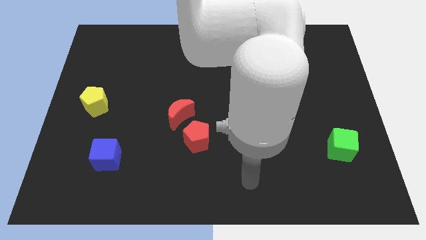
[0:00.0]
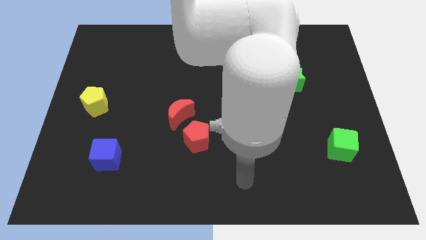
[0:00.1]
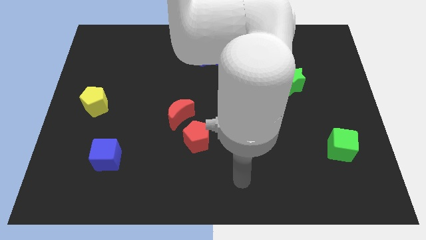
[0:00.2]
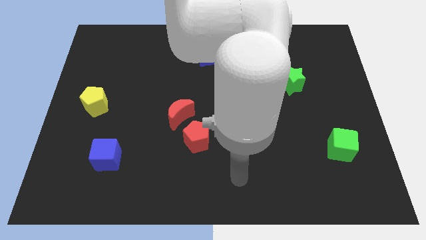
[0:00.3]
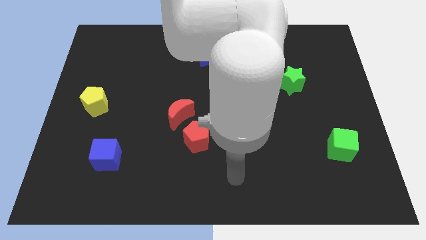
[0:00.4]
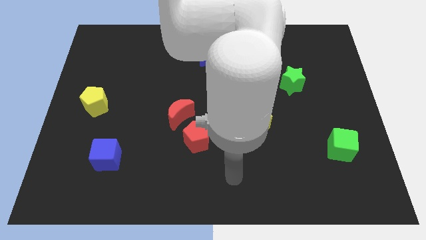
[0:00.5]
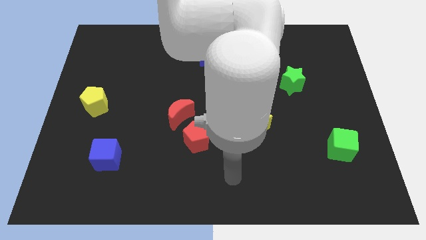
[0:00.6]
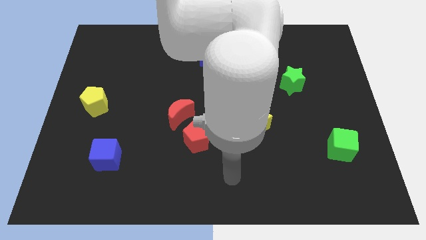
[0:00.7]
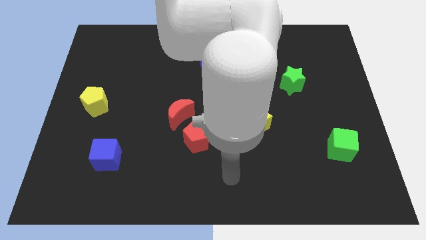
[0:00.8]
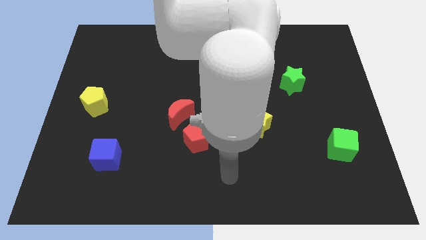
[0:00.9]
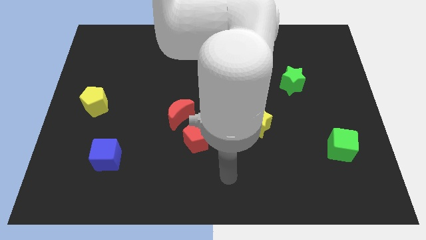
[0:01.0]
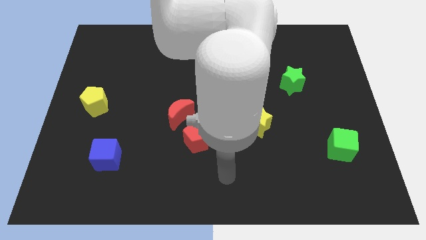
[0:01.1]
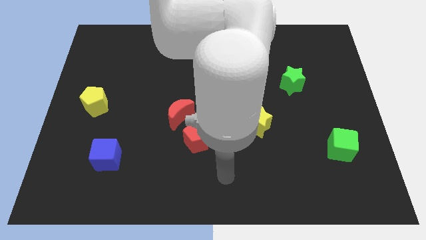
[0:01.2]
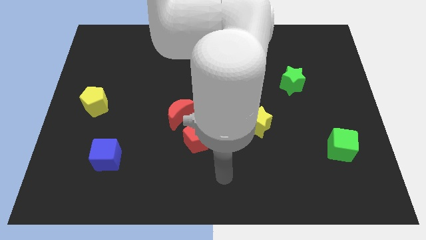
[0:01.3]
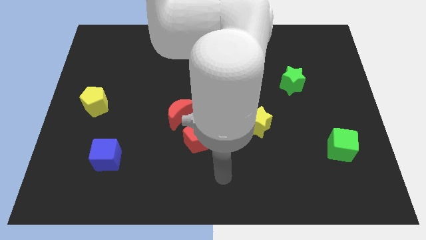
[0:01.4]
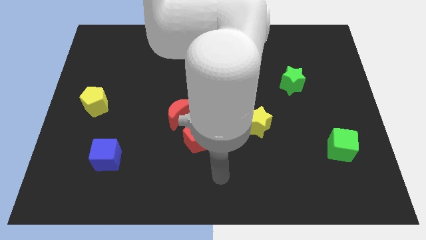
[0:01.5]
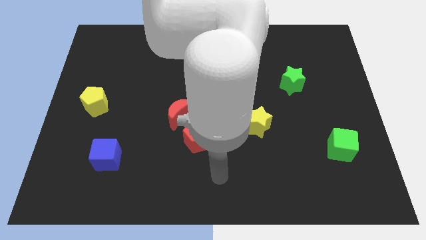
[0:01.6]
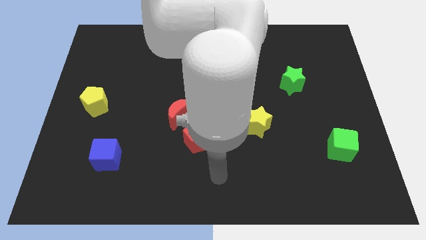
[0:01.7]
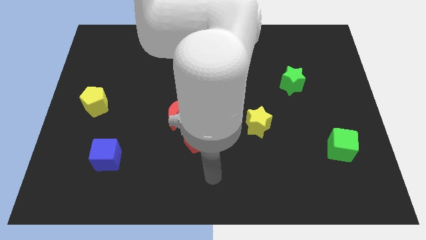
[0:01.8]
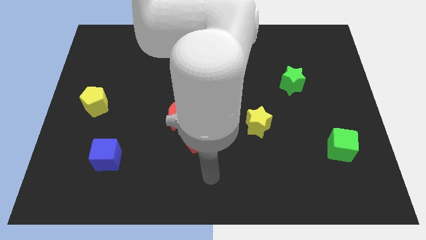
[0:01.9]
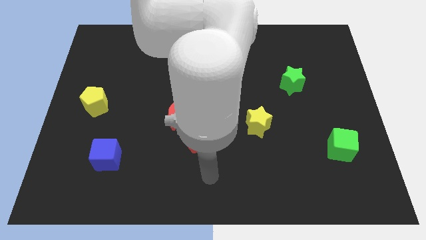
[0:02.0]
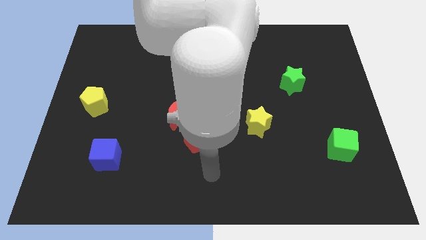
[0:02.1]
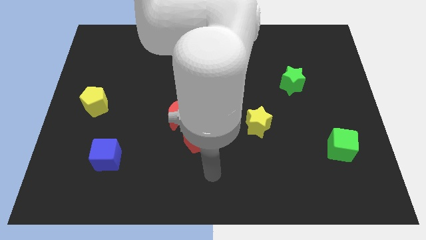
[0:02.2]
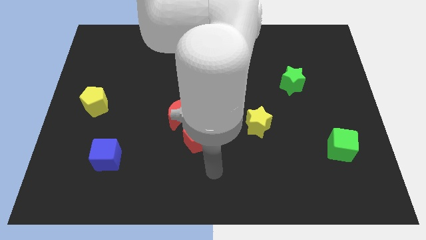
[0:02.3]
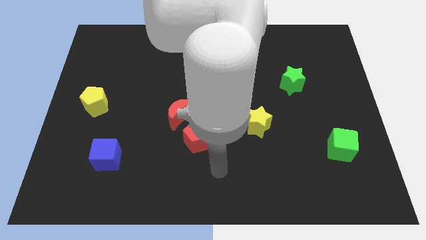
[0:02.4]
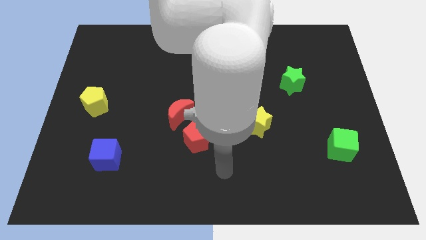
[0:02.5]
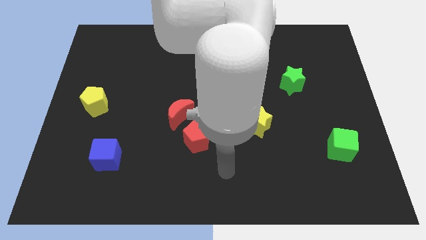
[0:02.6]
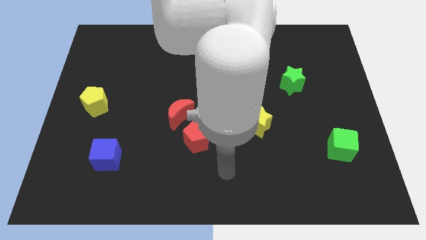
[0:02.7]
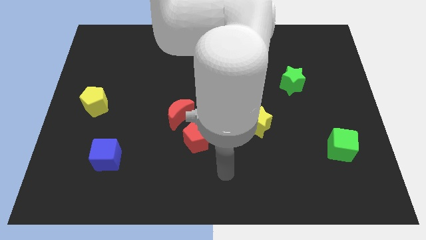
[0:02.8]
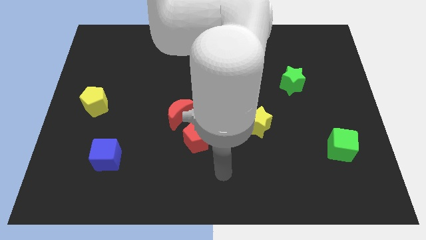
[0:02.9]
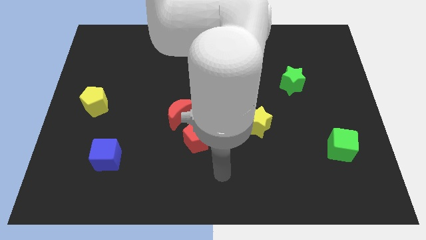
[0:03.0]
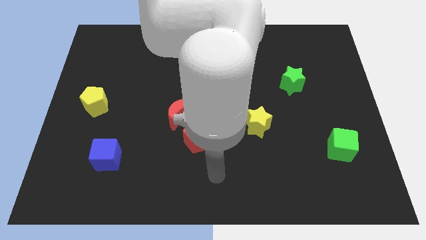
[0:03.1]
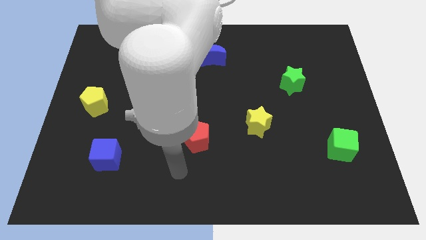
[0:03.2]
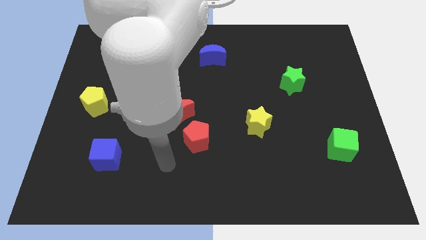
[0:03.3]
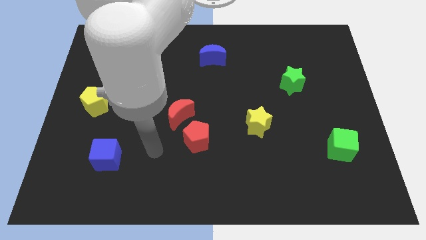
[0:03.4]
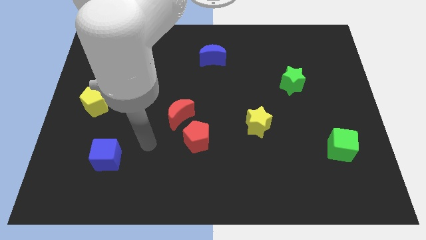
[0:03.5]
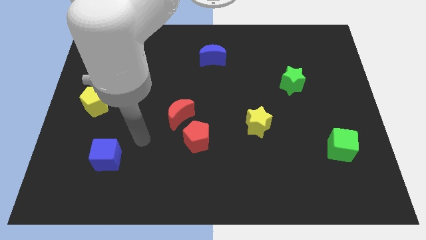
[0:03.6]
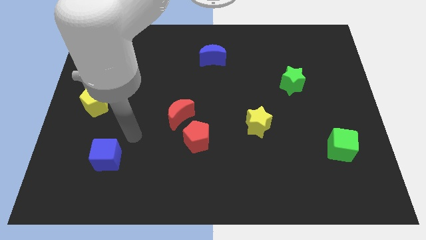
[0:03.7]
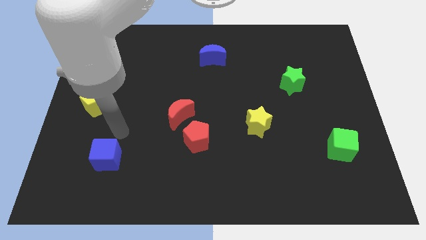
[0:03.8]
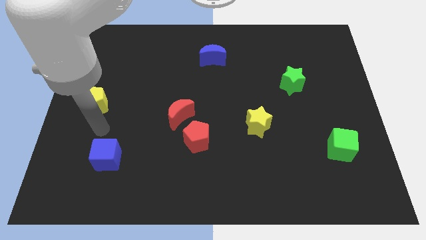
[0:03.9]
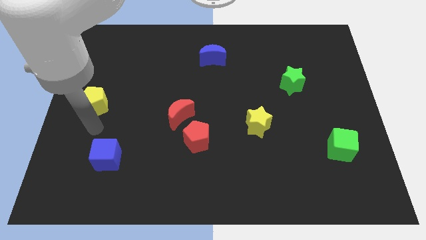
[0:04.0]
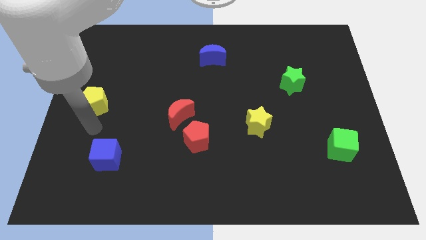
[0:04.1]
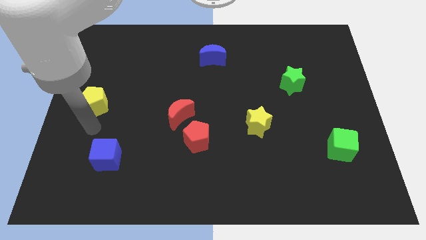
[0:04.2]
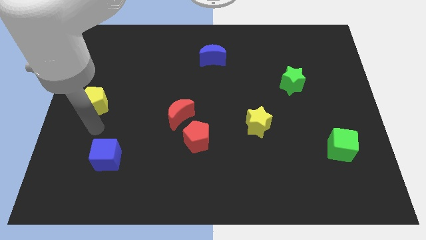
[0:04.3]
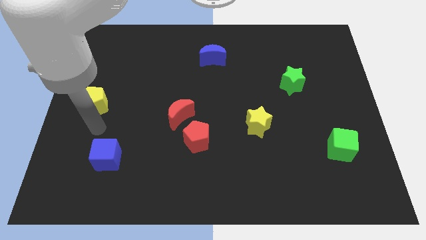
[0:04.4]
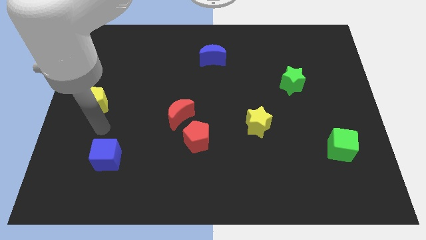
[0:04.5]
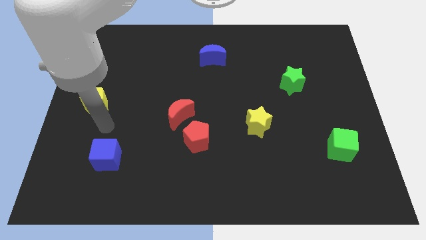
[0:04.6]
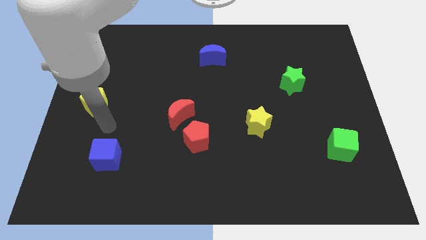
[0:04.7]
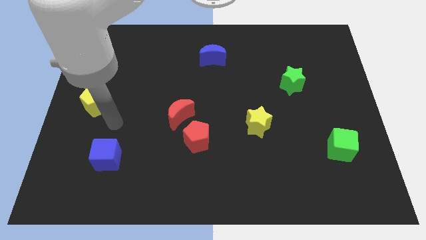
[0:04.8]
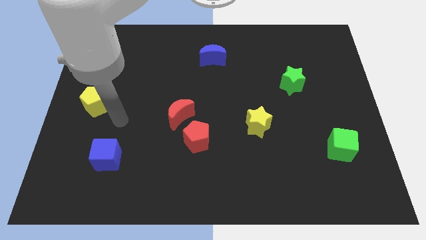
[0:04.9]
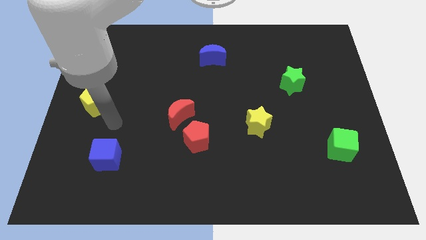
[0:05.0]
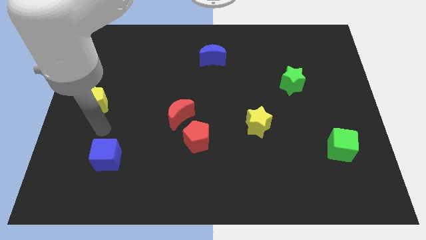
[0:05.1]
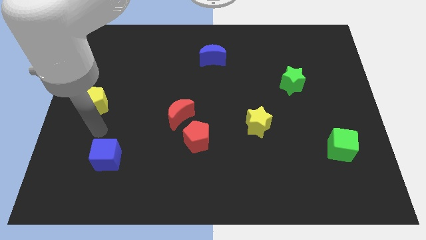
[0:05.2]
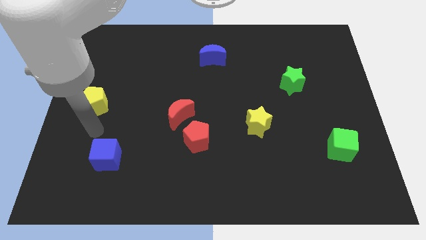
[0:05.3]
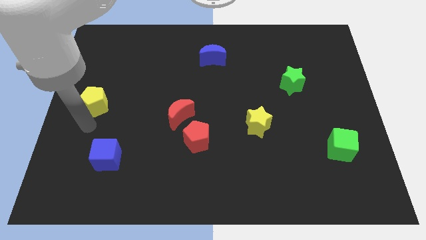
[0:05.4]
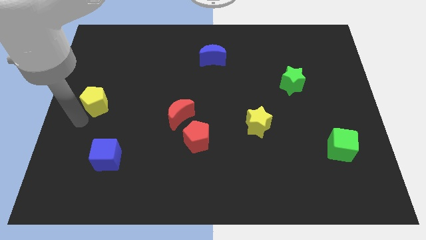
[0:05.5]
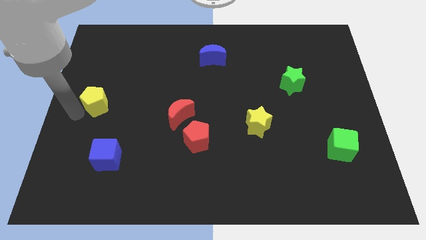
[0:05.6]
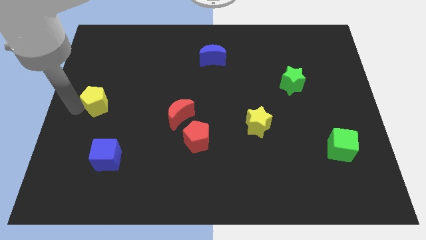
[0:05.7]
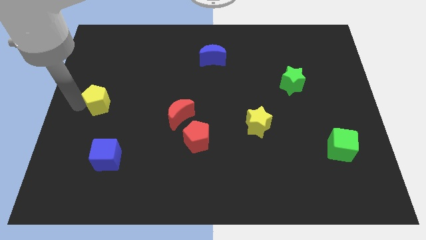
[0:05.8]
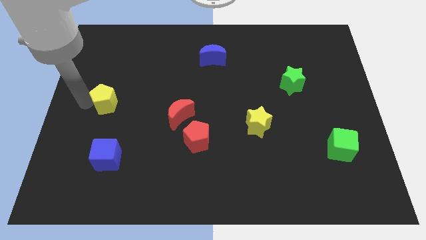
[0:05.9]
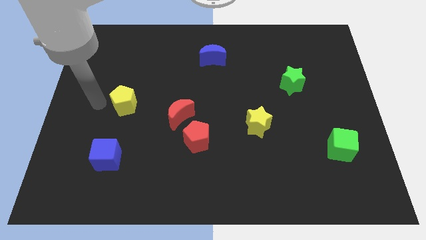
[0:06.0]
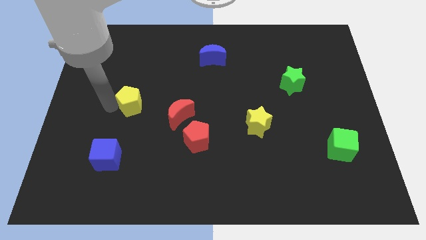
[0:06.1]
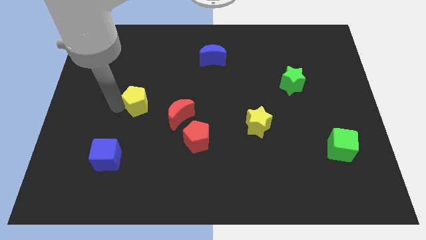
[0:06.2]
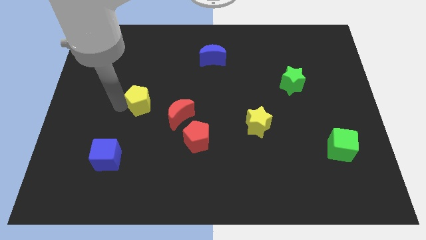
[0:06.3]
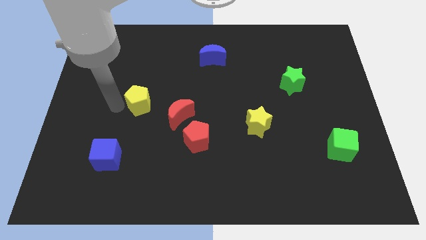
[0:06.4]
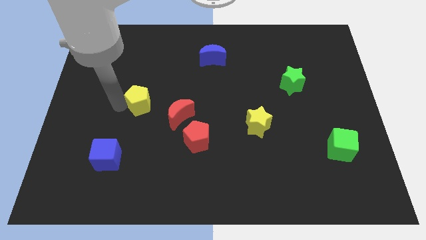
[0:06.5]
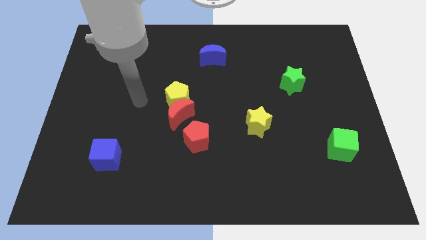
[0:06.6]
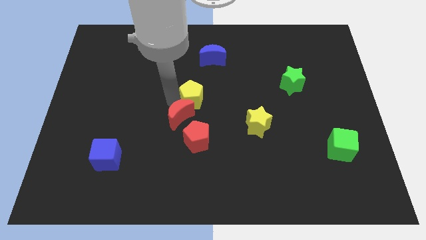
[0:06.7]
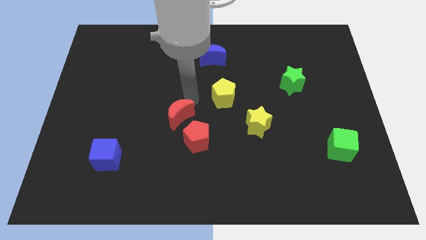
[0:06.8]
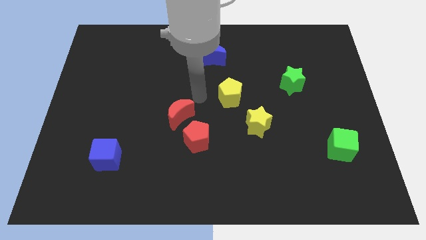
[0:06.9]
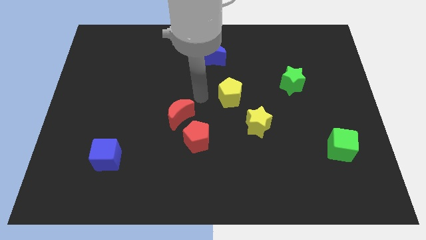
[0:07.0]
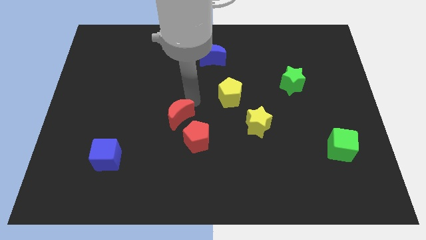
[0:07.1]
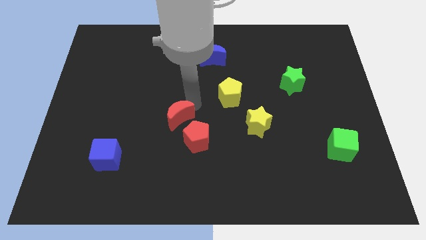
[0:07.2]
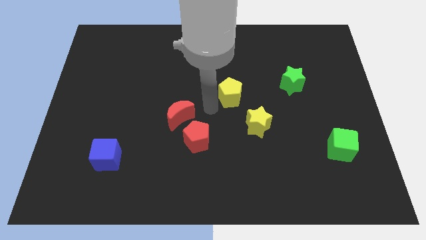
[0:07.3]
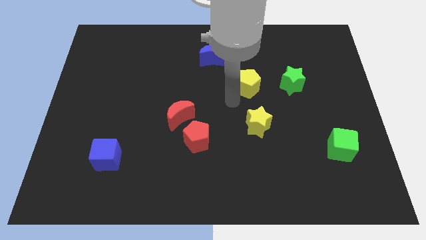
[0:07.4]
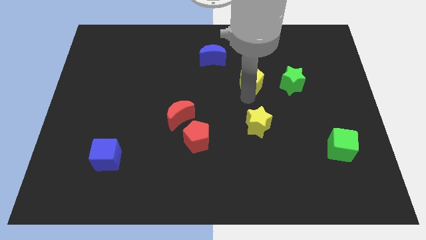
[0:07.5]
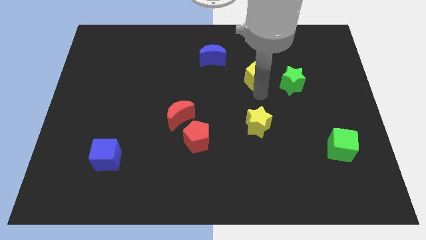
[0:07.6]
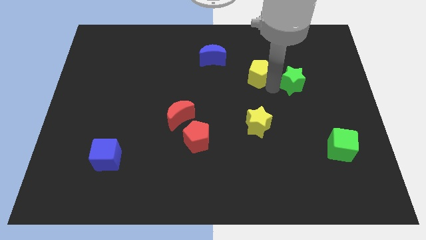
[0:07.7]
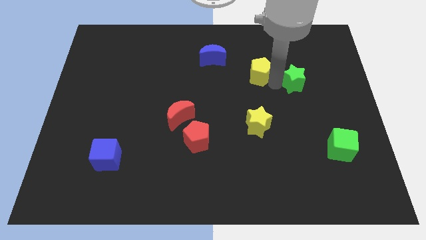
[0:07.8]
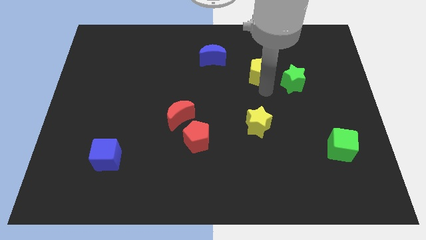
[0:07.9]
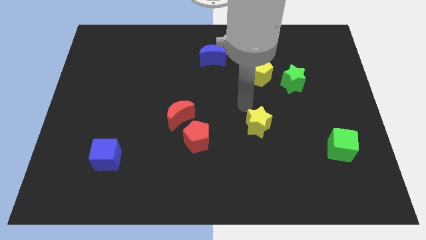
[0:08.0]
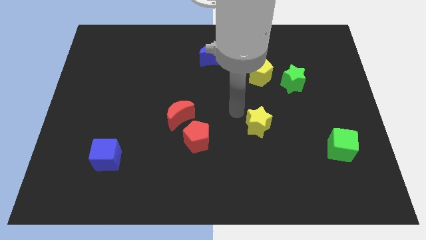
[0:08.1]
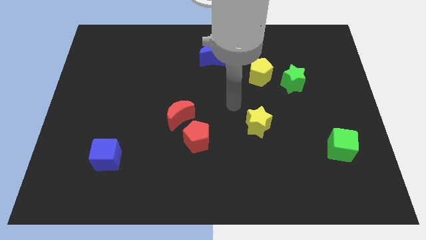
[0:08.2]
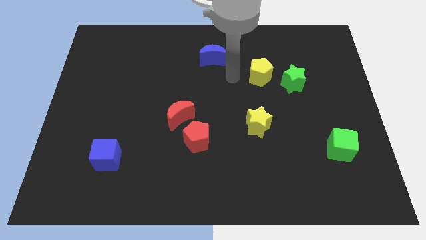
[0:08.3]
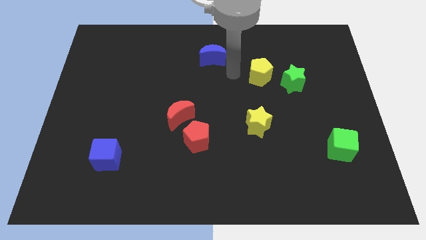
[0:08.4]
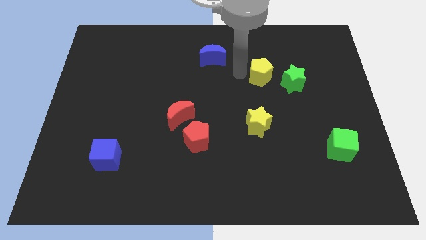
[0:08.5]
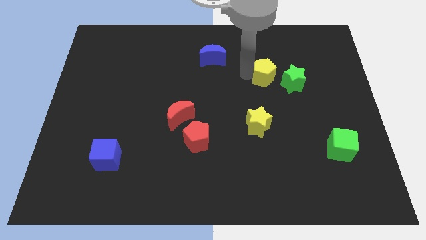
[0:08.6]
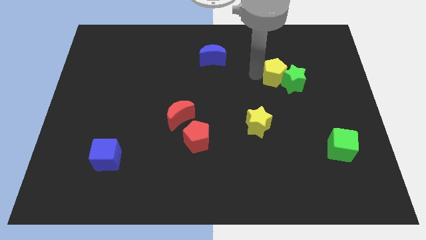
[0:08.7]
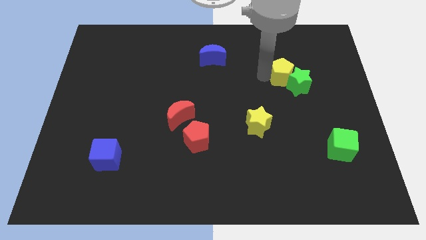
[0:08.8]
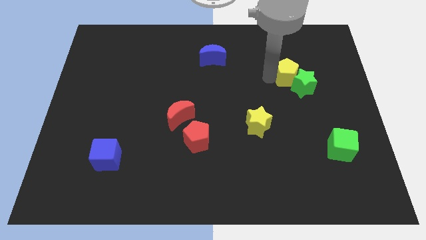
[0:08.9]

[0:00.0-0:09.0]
slide the yellow pentagon towards the green star
